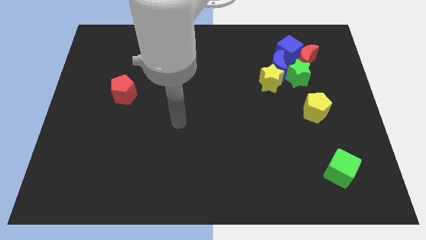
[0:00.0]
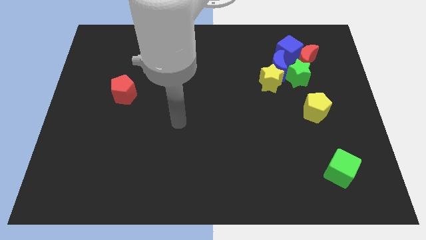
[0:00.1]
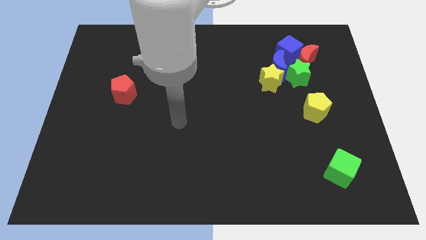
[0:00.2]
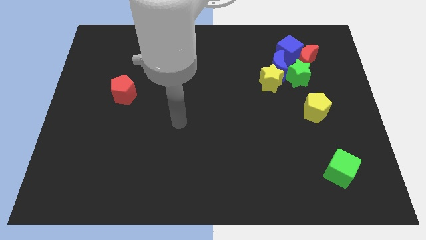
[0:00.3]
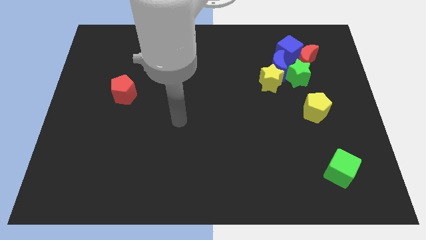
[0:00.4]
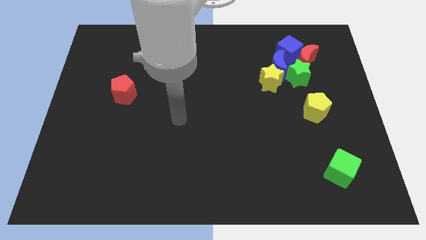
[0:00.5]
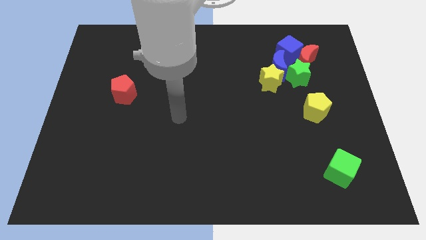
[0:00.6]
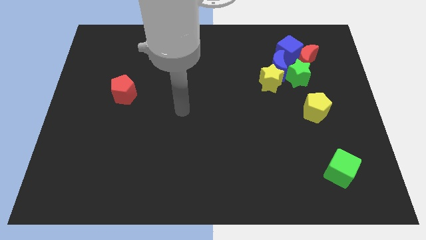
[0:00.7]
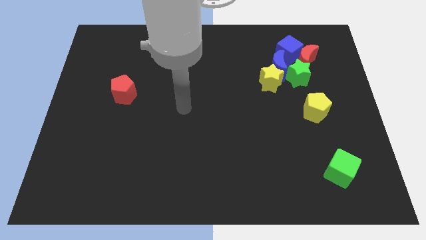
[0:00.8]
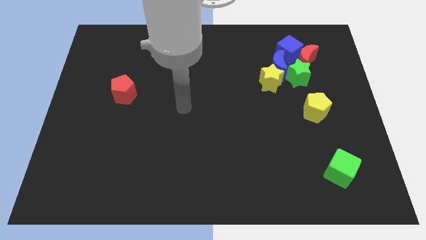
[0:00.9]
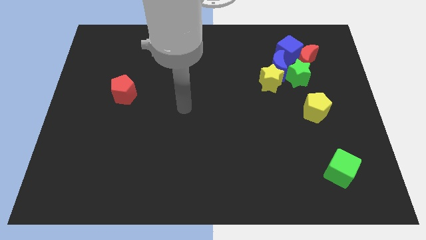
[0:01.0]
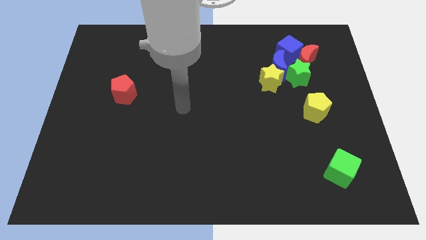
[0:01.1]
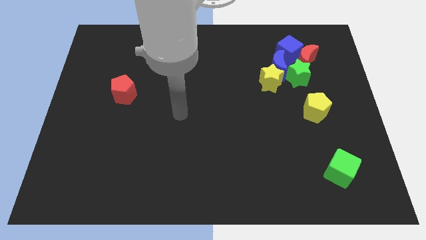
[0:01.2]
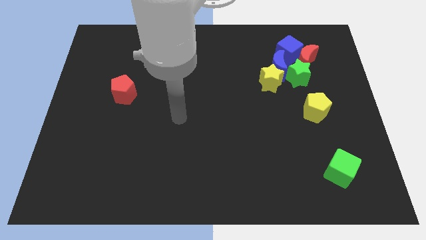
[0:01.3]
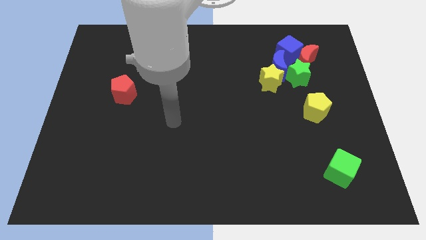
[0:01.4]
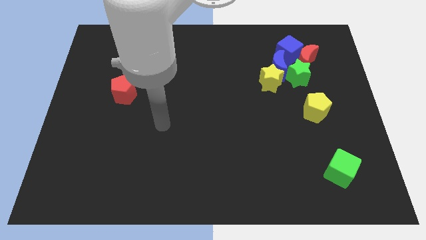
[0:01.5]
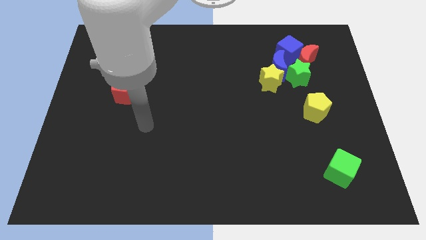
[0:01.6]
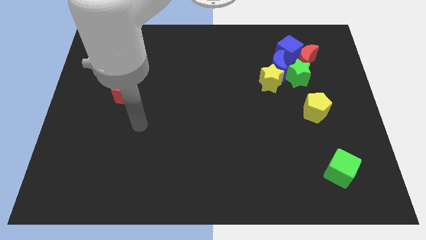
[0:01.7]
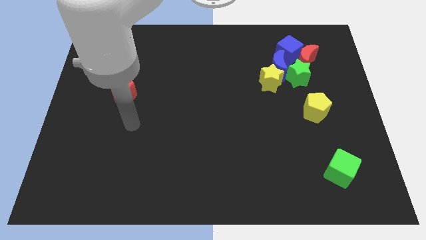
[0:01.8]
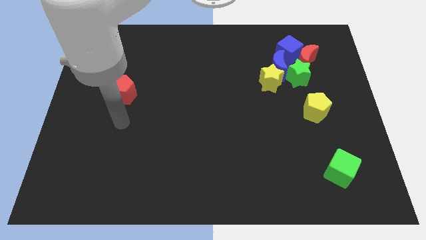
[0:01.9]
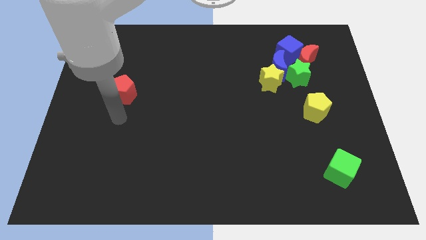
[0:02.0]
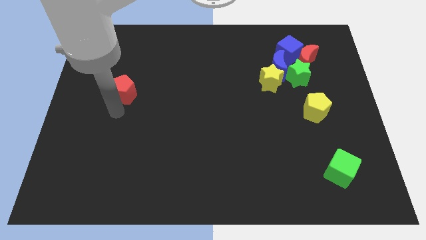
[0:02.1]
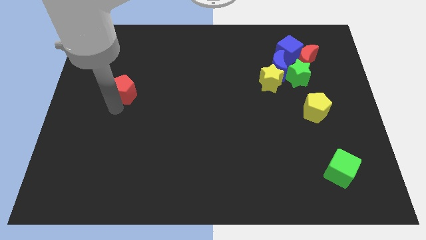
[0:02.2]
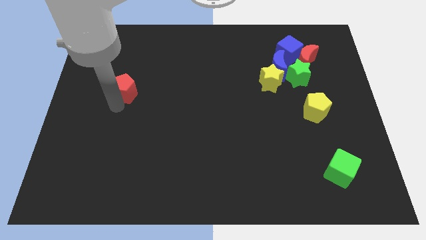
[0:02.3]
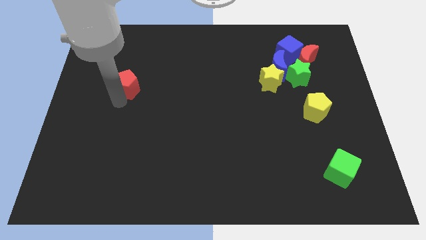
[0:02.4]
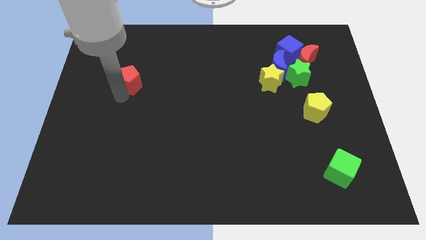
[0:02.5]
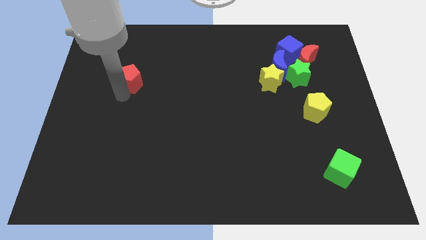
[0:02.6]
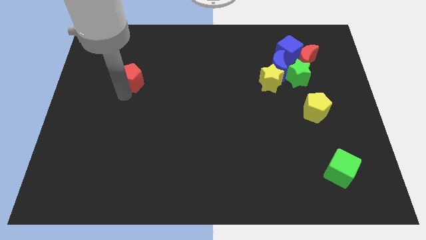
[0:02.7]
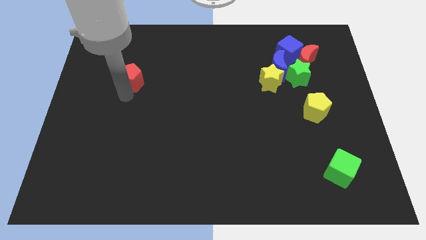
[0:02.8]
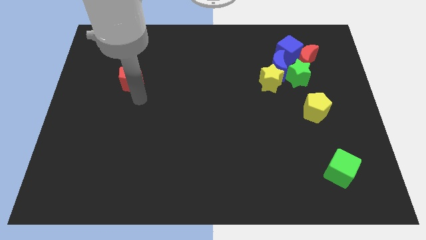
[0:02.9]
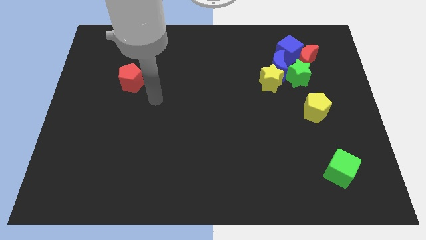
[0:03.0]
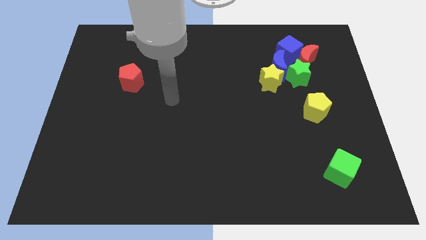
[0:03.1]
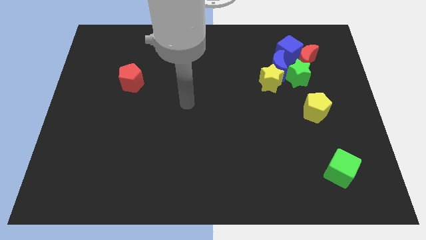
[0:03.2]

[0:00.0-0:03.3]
move the red pentagon slightly to the top of the board

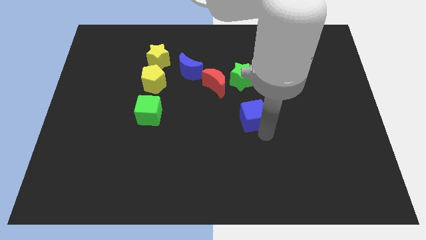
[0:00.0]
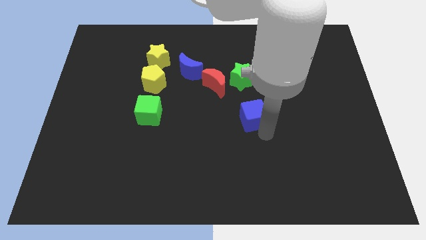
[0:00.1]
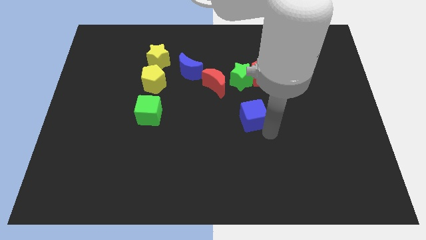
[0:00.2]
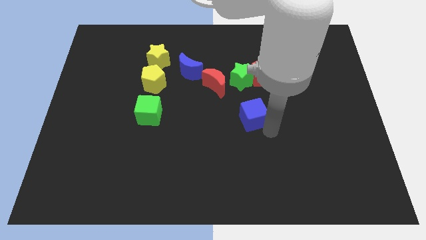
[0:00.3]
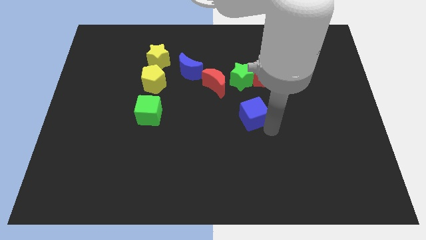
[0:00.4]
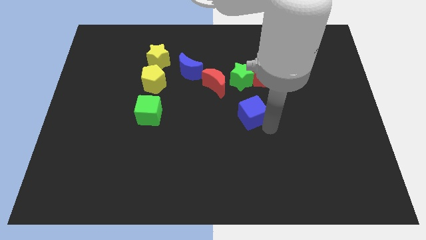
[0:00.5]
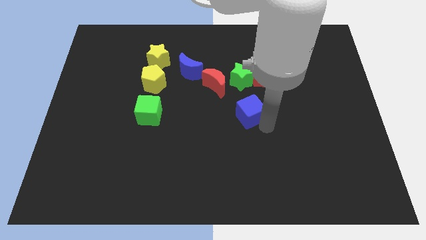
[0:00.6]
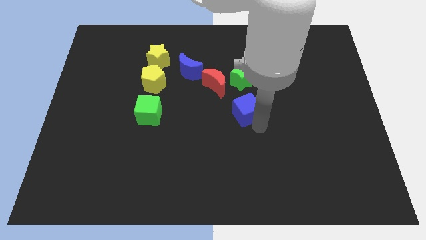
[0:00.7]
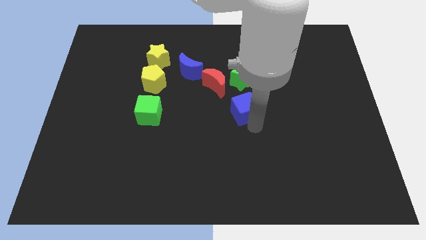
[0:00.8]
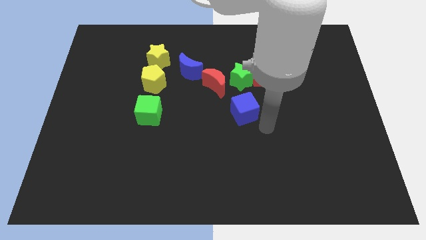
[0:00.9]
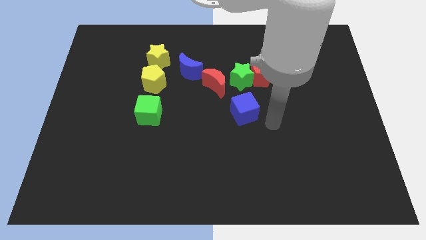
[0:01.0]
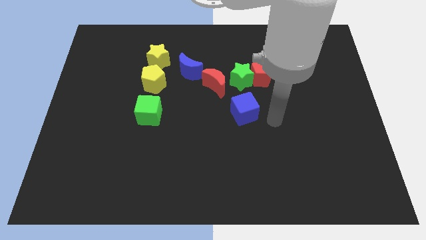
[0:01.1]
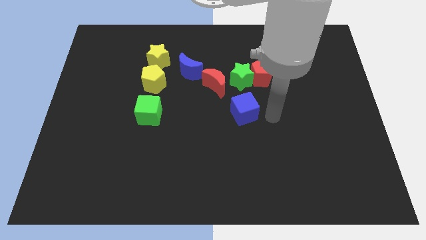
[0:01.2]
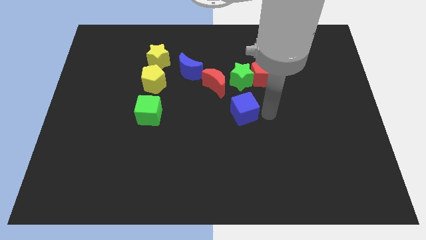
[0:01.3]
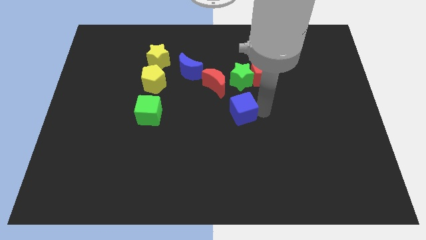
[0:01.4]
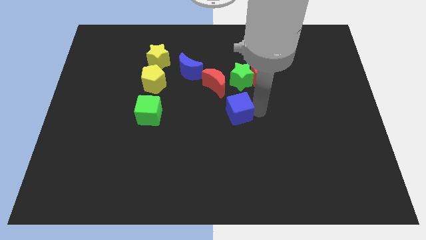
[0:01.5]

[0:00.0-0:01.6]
move blue cube towards the red crescent

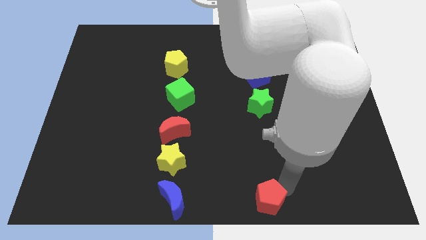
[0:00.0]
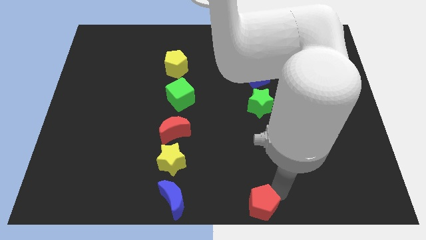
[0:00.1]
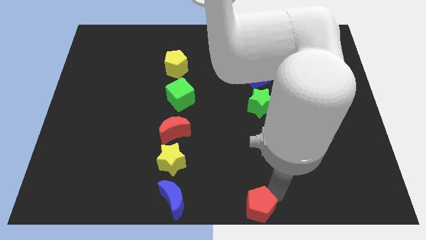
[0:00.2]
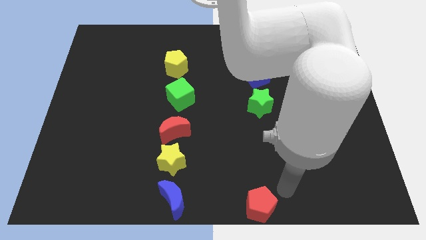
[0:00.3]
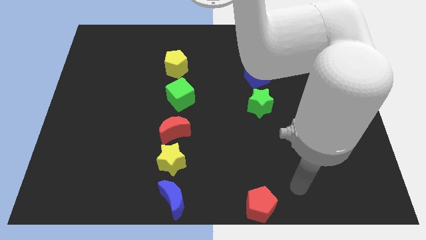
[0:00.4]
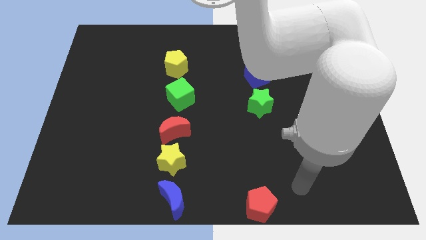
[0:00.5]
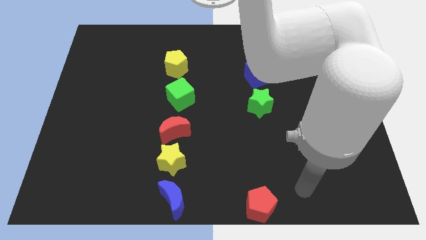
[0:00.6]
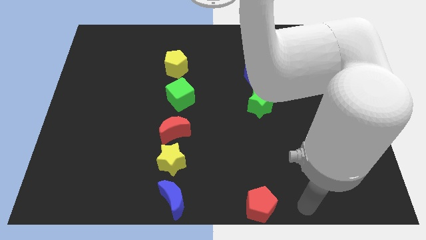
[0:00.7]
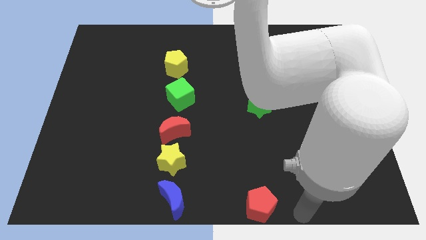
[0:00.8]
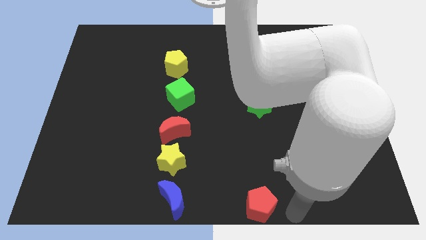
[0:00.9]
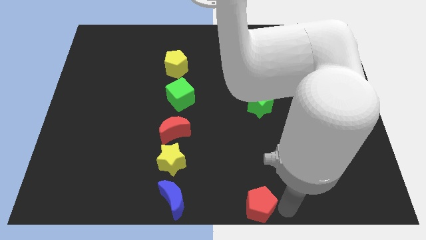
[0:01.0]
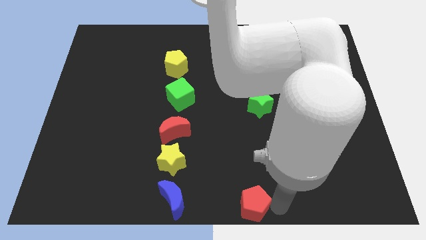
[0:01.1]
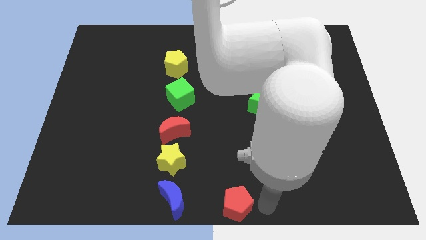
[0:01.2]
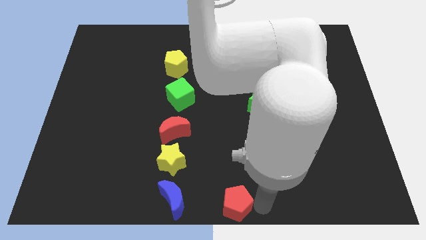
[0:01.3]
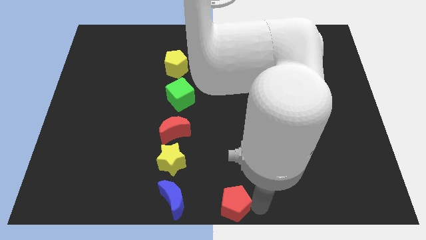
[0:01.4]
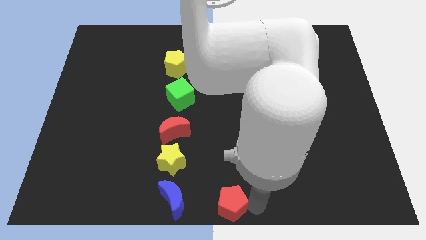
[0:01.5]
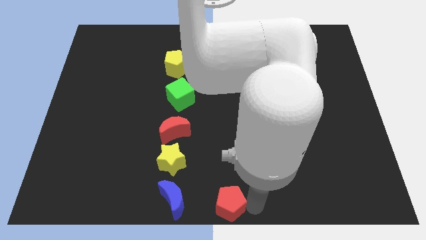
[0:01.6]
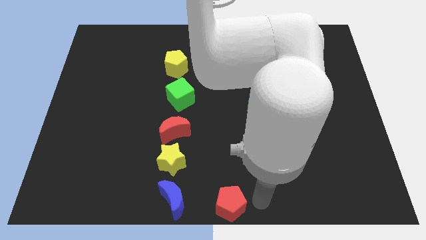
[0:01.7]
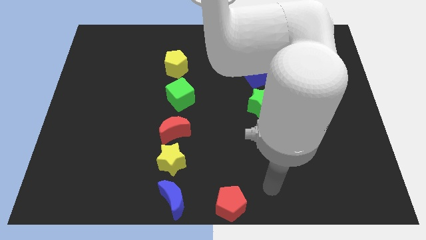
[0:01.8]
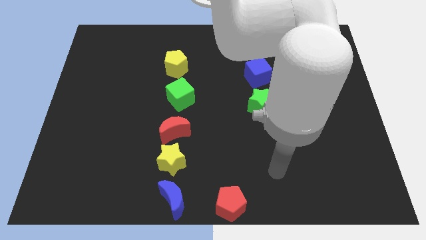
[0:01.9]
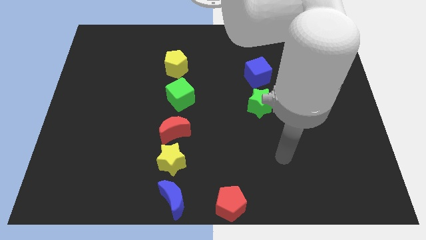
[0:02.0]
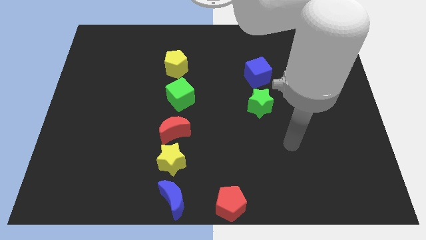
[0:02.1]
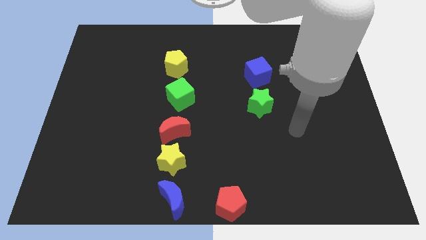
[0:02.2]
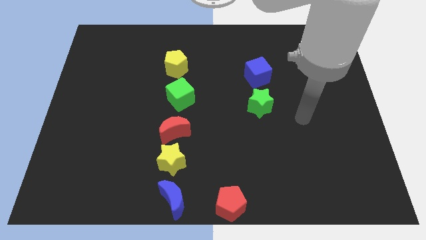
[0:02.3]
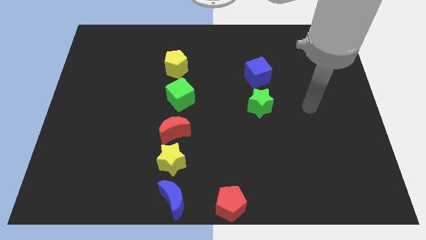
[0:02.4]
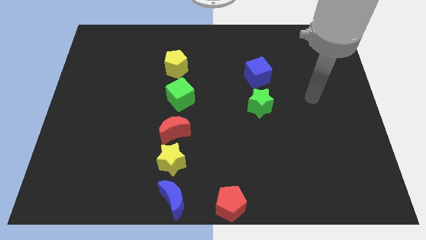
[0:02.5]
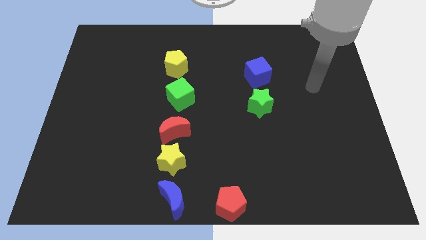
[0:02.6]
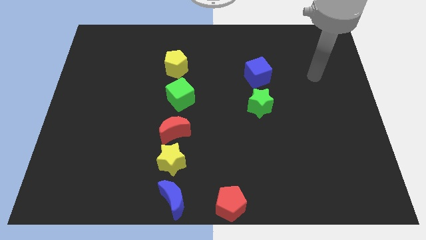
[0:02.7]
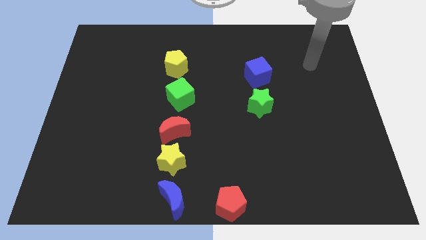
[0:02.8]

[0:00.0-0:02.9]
push the red pentagon towards the blue moon and move away

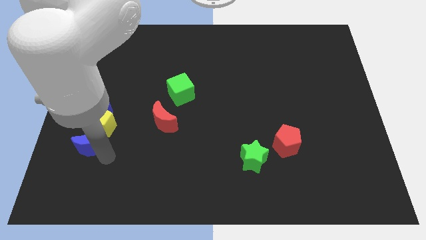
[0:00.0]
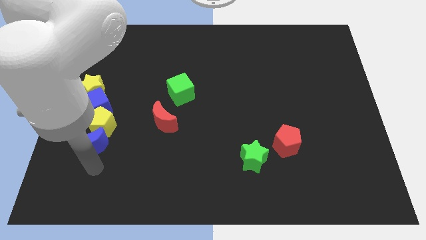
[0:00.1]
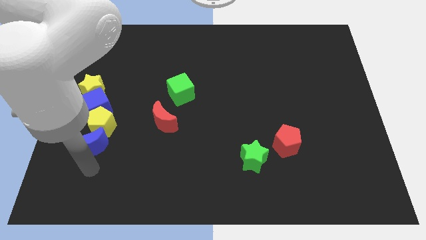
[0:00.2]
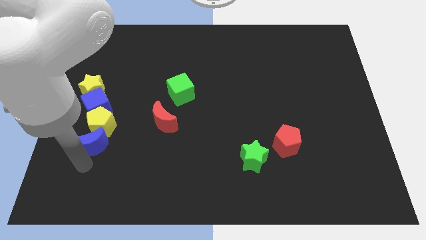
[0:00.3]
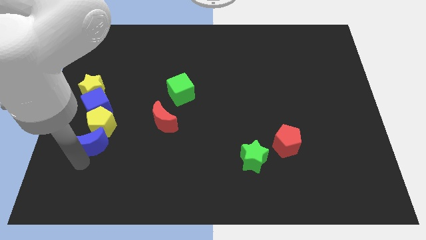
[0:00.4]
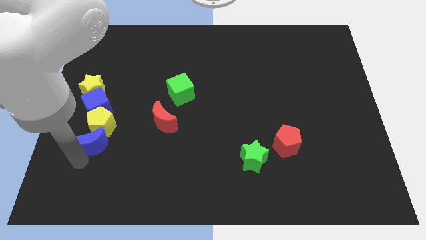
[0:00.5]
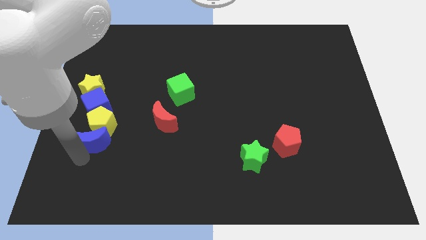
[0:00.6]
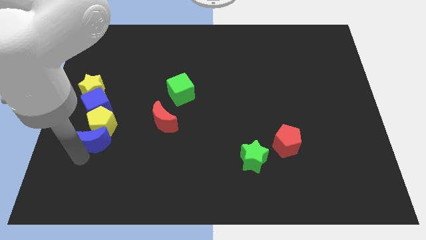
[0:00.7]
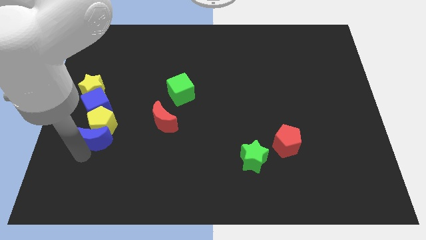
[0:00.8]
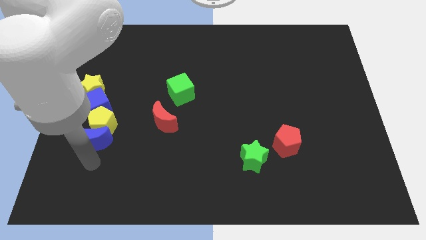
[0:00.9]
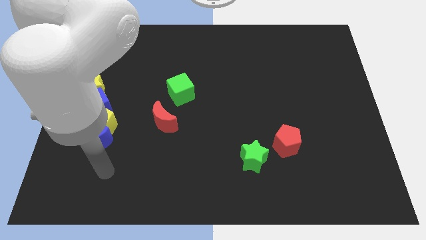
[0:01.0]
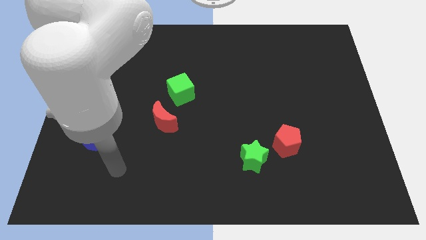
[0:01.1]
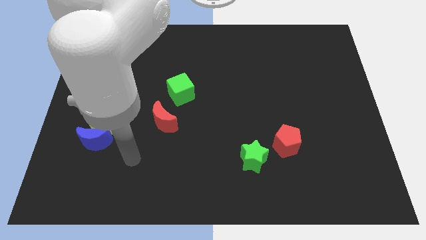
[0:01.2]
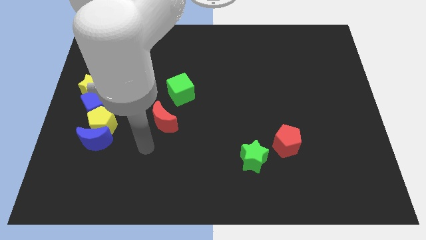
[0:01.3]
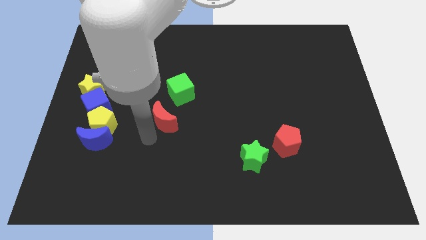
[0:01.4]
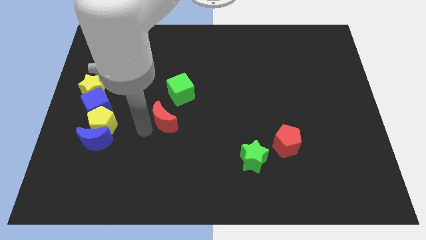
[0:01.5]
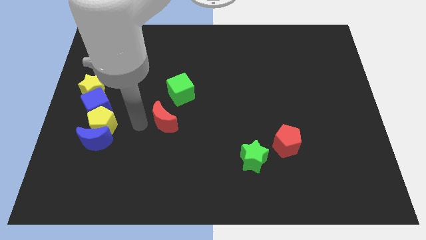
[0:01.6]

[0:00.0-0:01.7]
adjust the blue crescent to the bottom side of the yellow pentagon
